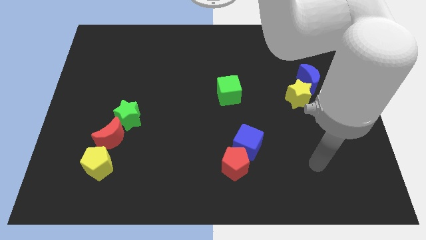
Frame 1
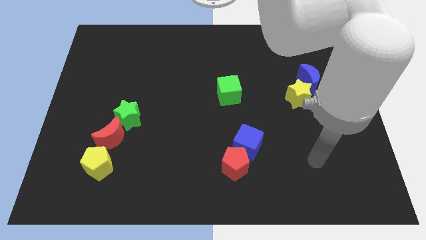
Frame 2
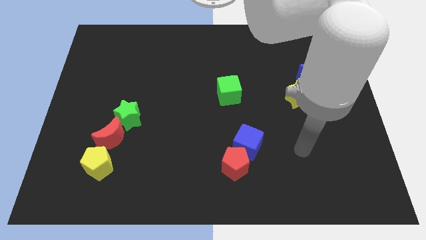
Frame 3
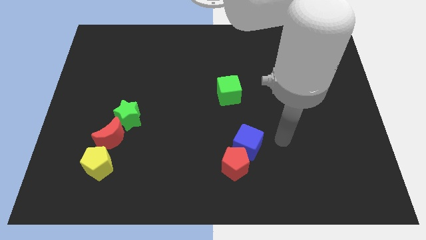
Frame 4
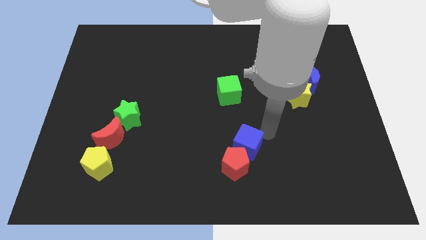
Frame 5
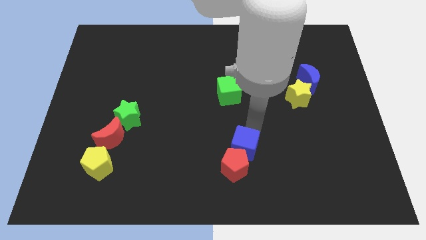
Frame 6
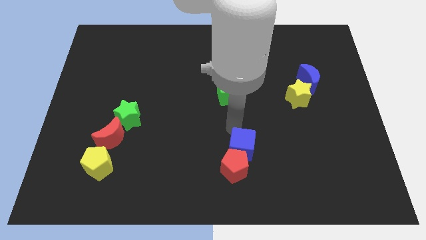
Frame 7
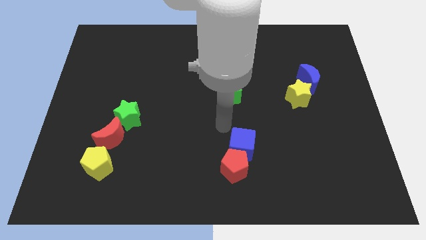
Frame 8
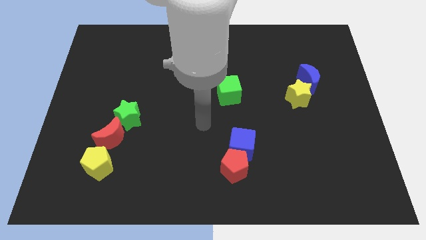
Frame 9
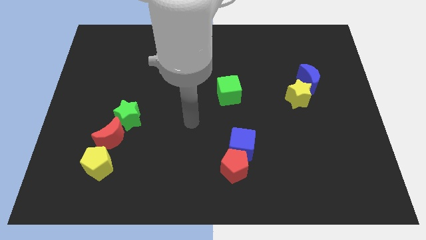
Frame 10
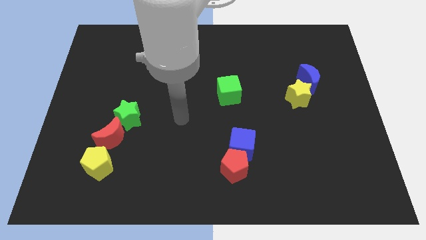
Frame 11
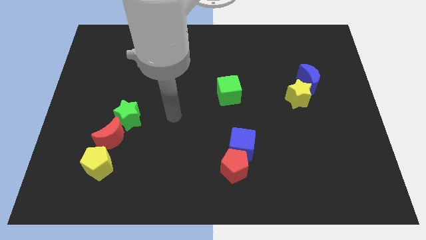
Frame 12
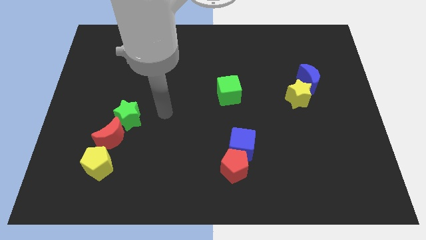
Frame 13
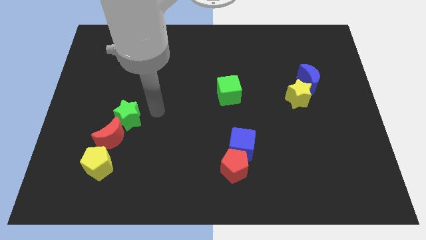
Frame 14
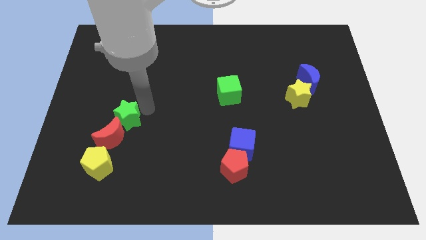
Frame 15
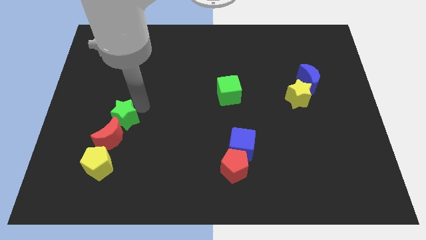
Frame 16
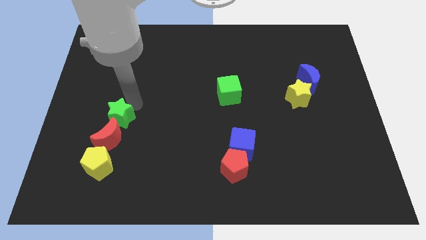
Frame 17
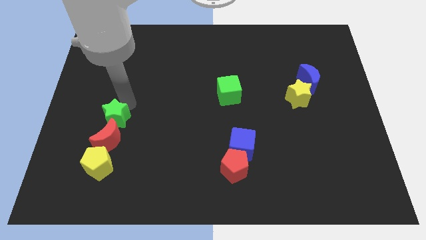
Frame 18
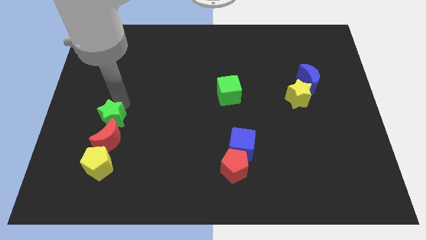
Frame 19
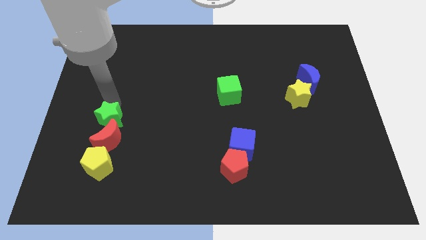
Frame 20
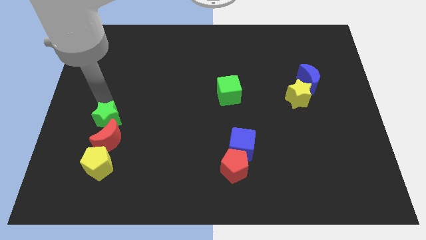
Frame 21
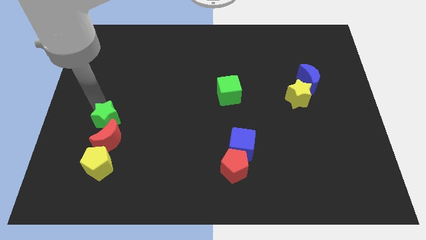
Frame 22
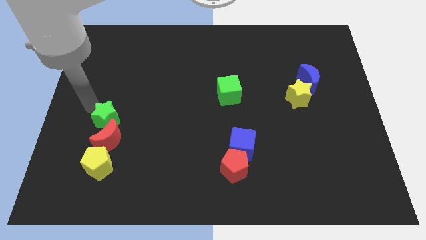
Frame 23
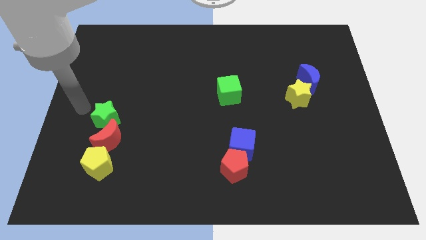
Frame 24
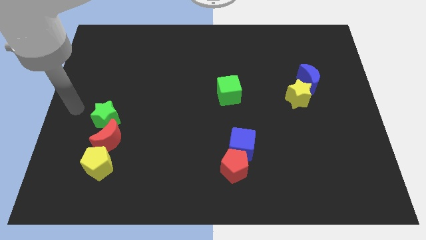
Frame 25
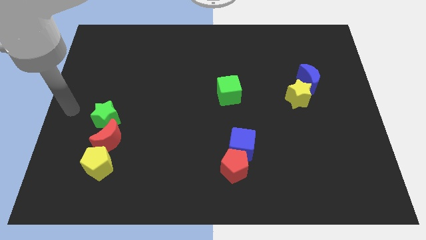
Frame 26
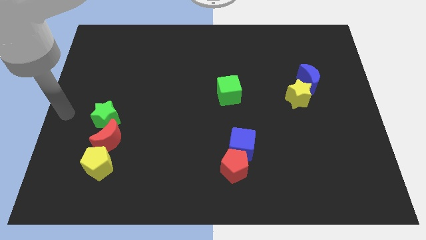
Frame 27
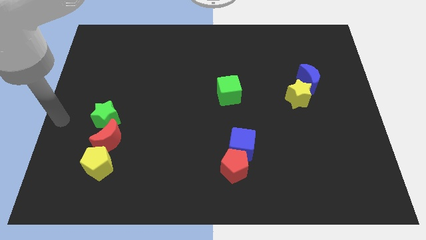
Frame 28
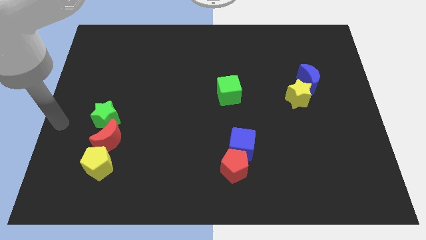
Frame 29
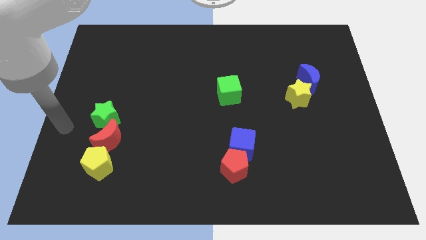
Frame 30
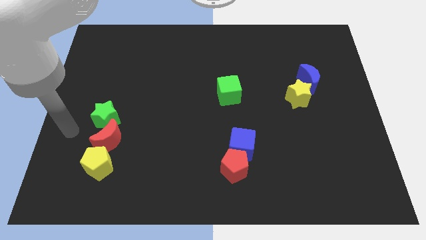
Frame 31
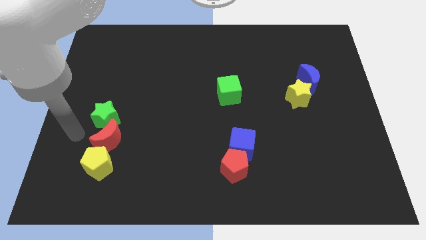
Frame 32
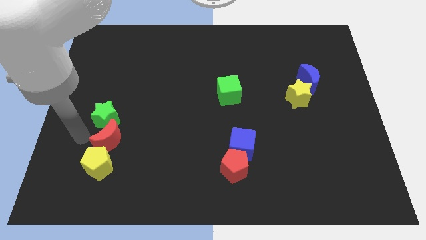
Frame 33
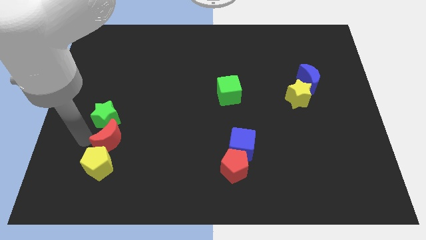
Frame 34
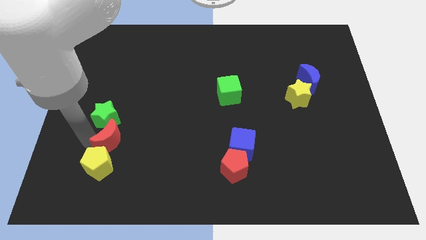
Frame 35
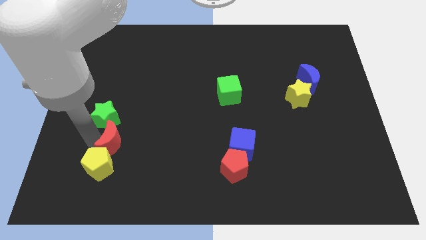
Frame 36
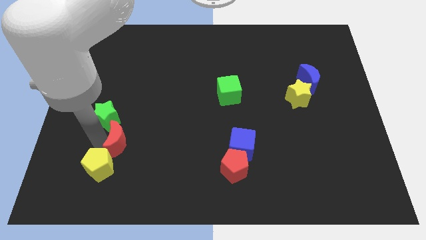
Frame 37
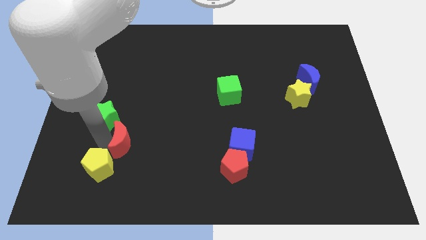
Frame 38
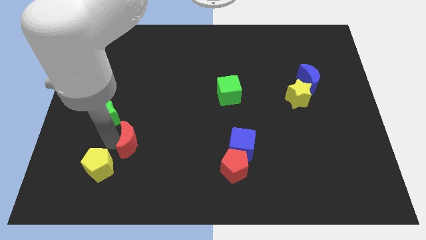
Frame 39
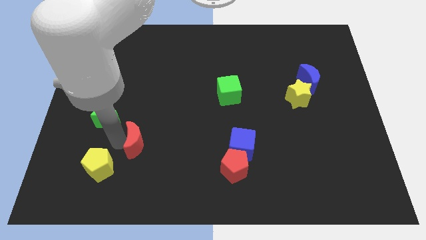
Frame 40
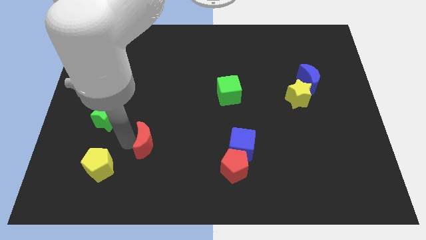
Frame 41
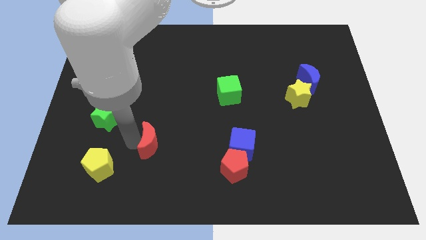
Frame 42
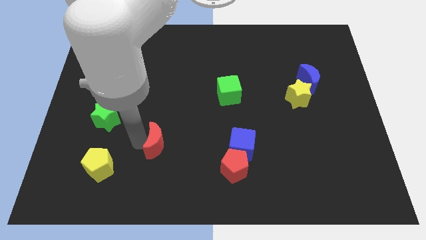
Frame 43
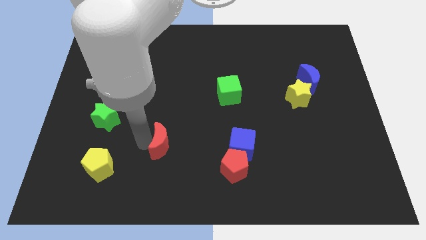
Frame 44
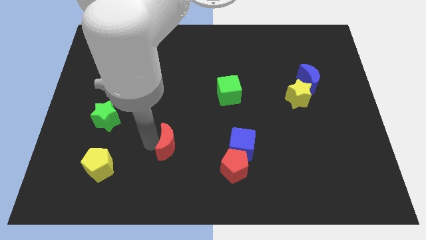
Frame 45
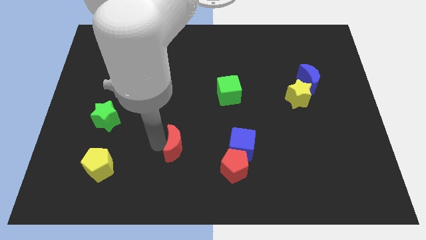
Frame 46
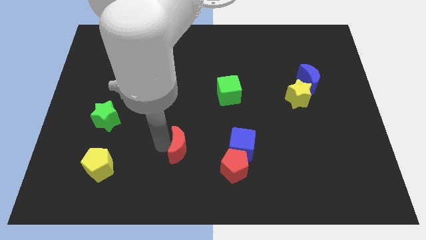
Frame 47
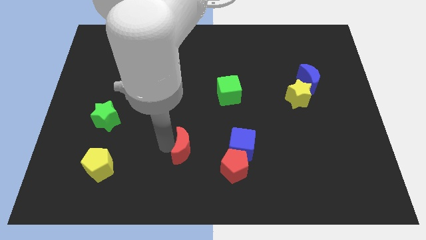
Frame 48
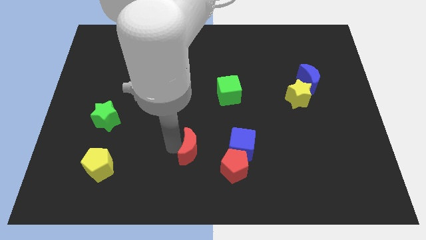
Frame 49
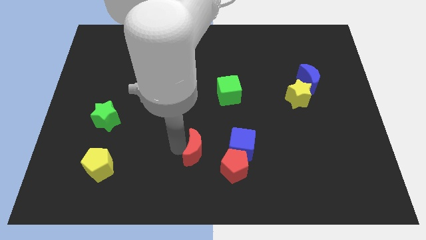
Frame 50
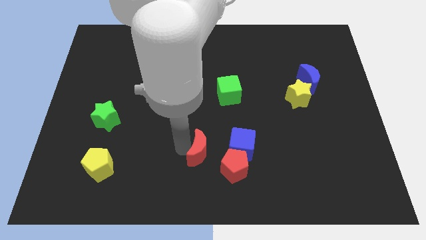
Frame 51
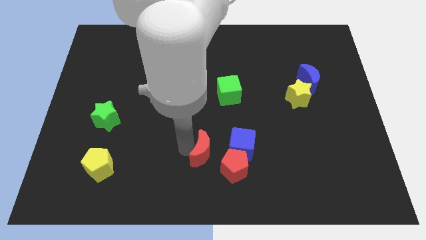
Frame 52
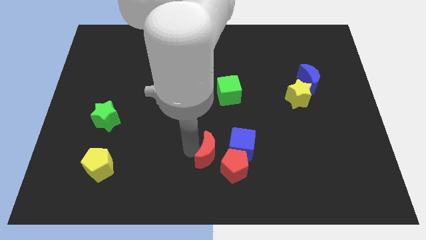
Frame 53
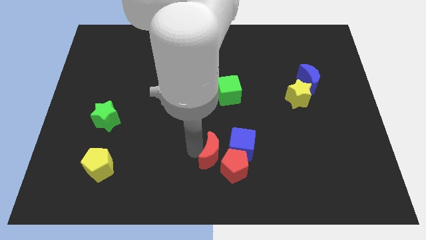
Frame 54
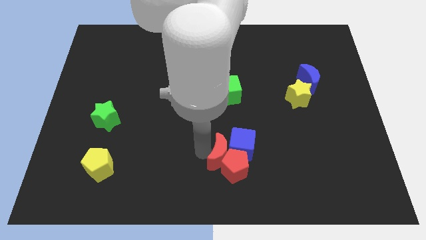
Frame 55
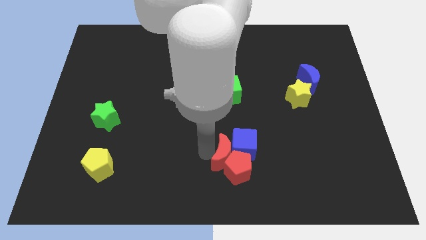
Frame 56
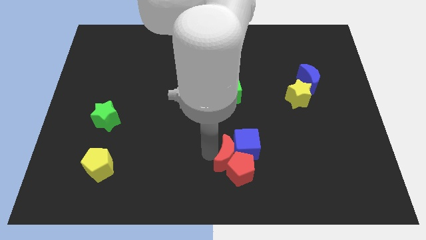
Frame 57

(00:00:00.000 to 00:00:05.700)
put the red moon to the blue cube

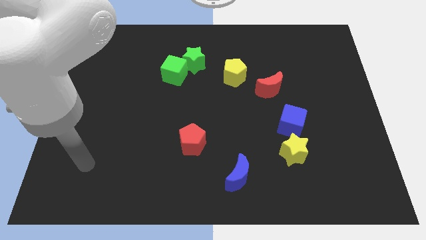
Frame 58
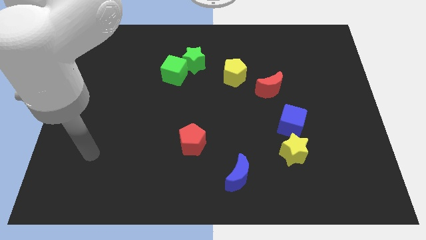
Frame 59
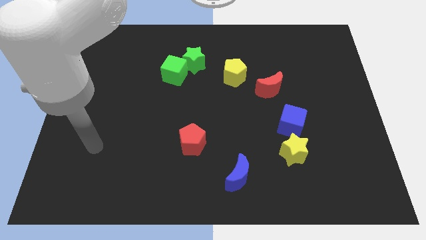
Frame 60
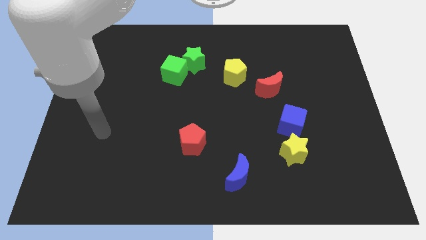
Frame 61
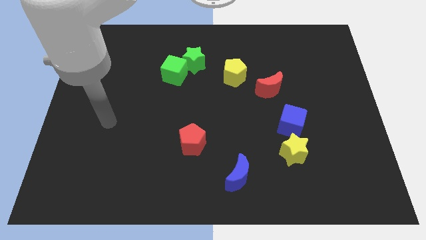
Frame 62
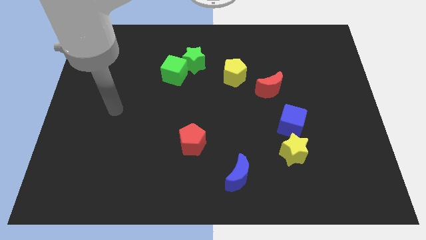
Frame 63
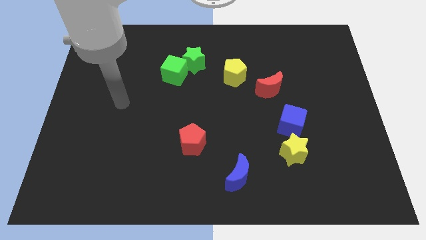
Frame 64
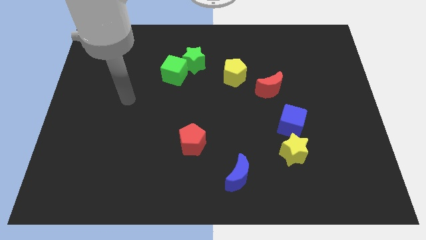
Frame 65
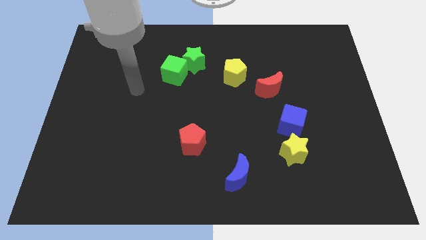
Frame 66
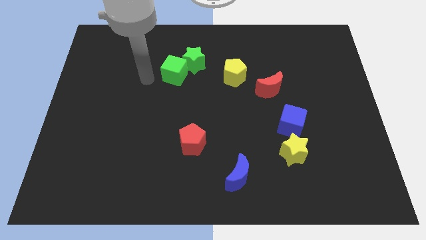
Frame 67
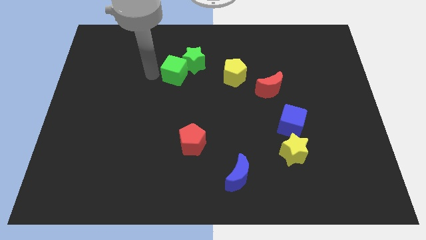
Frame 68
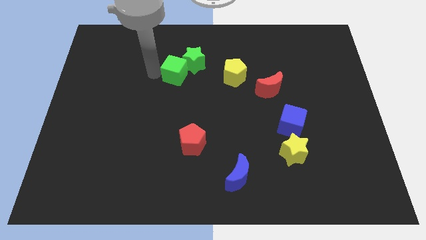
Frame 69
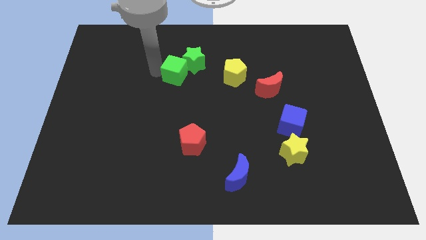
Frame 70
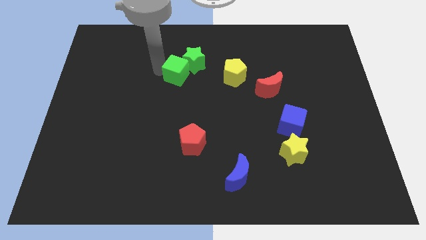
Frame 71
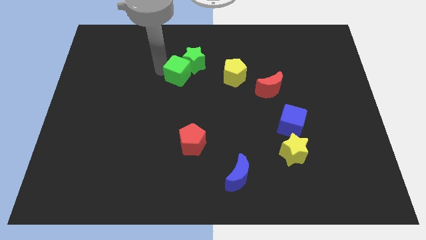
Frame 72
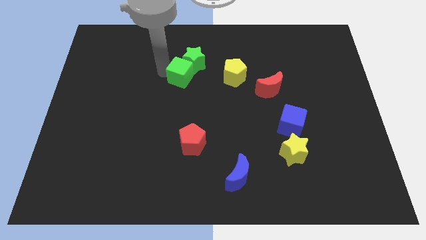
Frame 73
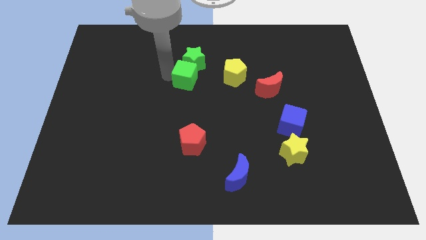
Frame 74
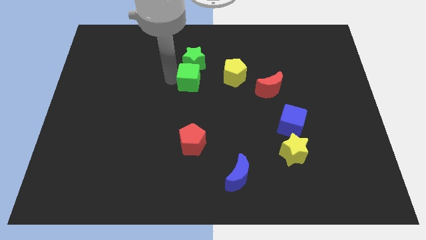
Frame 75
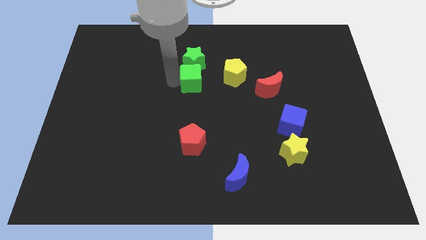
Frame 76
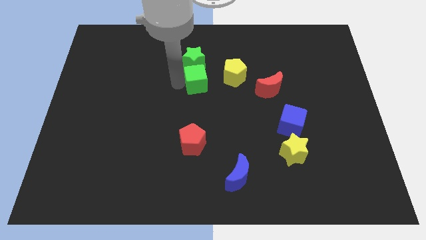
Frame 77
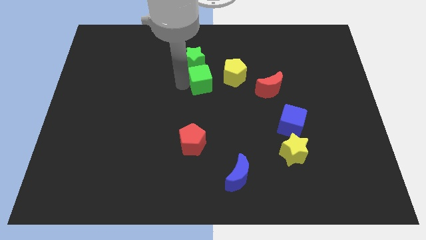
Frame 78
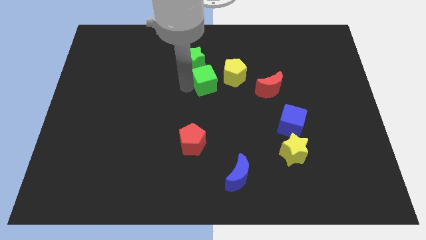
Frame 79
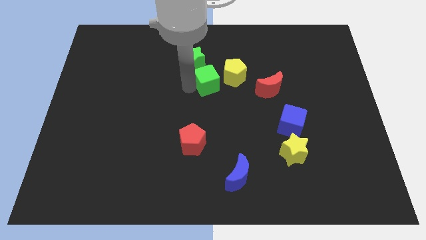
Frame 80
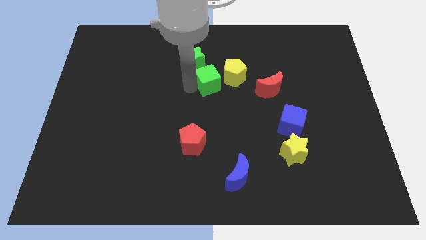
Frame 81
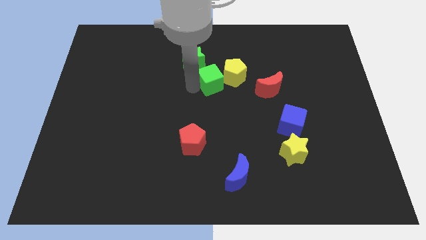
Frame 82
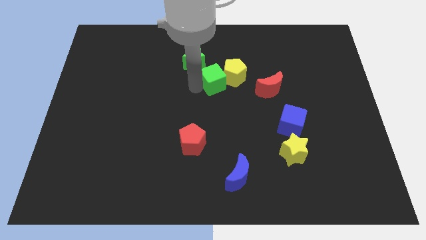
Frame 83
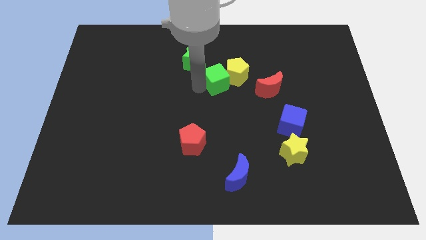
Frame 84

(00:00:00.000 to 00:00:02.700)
push the green cube to the yellow pentagon
